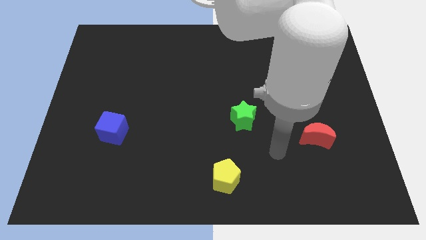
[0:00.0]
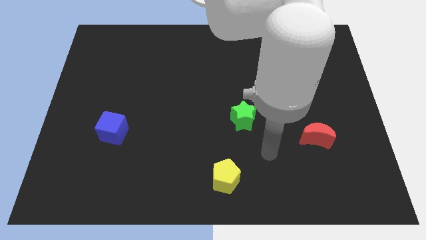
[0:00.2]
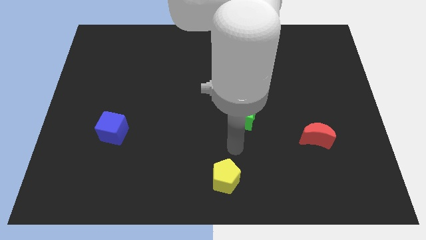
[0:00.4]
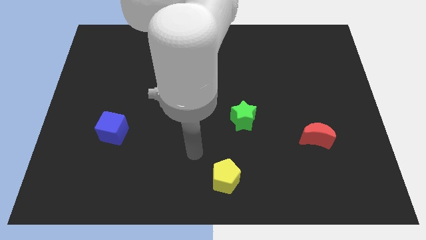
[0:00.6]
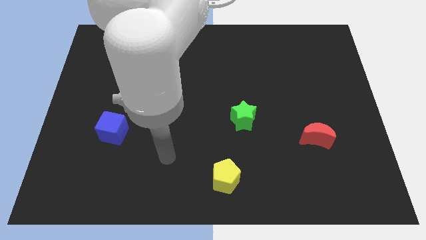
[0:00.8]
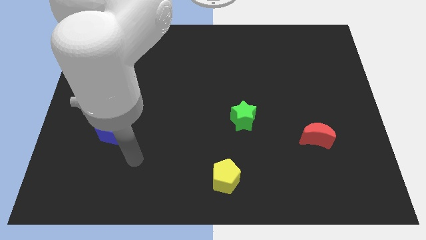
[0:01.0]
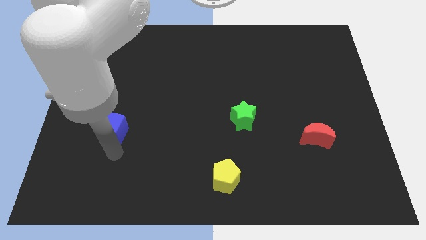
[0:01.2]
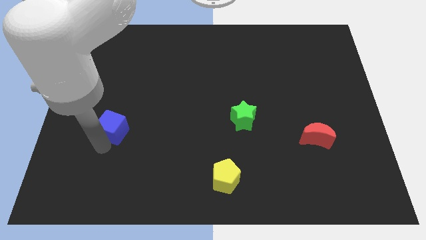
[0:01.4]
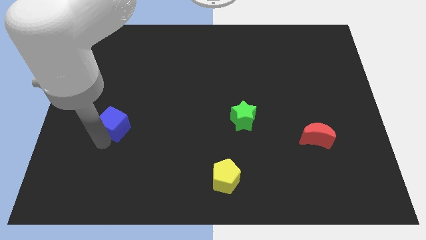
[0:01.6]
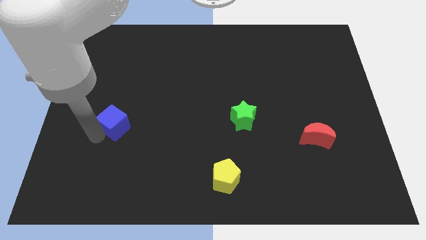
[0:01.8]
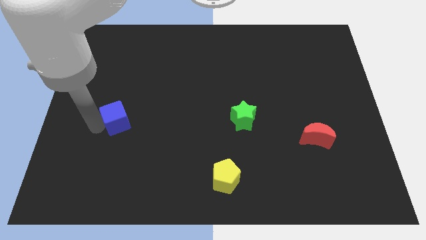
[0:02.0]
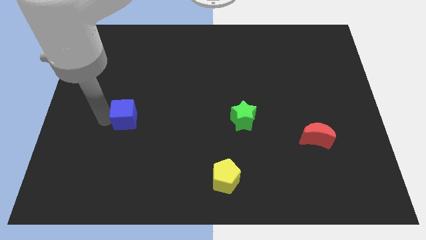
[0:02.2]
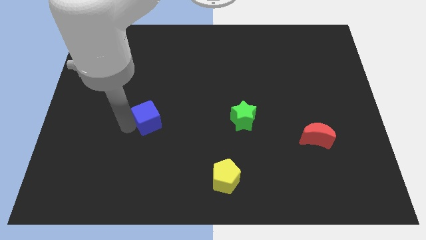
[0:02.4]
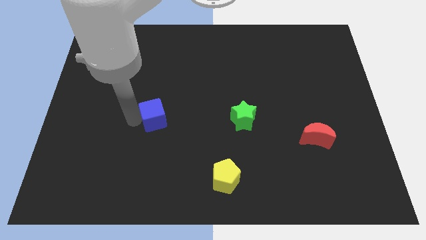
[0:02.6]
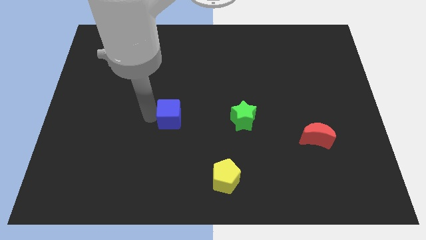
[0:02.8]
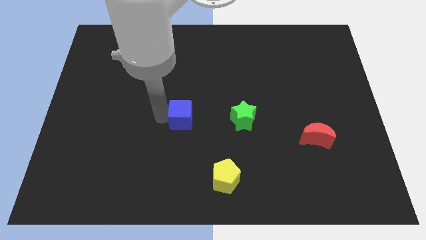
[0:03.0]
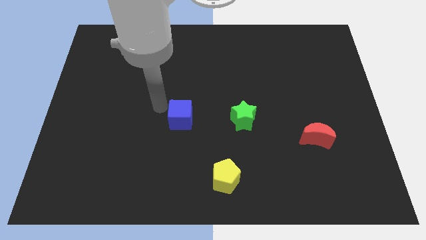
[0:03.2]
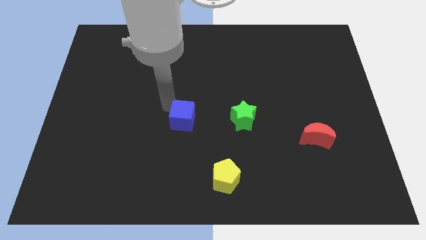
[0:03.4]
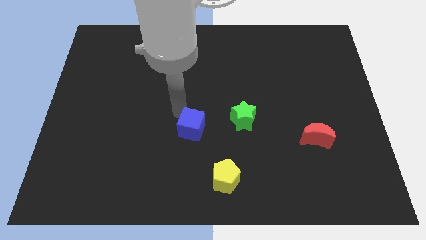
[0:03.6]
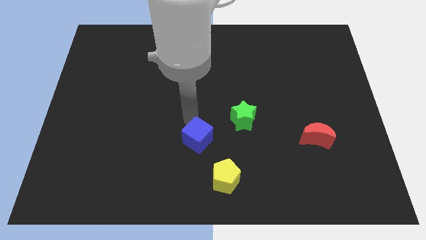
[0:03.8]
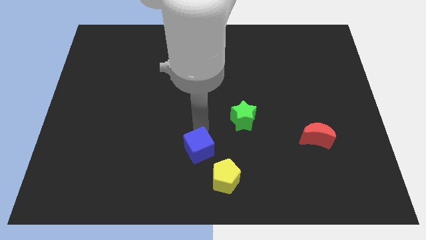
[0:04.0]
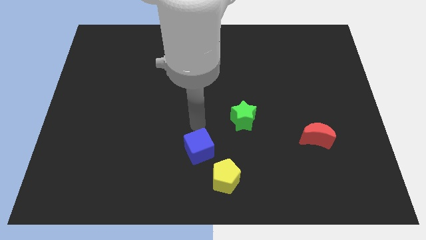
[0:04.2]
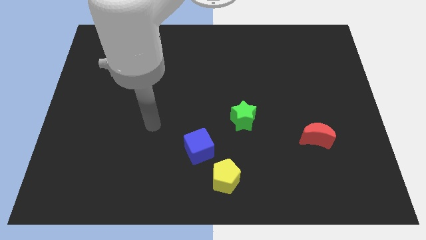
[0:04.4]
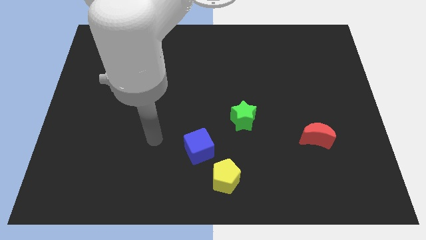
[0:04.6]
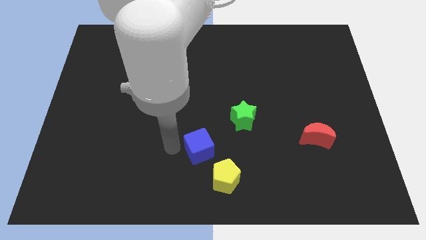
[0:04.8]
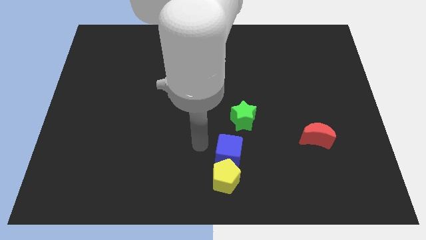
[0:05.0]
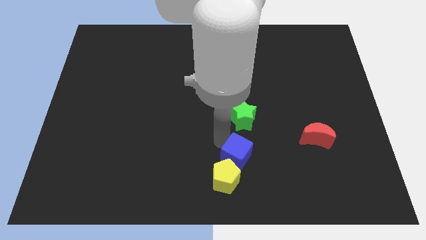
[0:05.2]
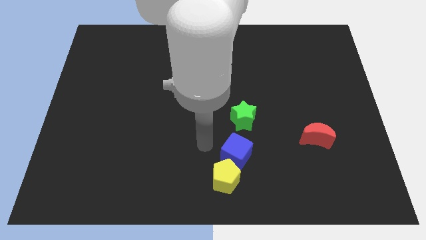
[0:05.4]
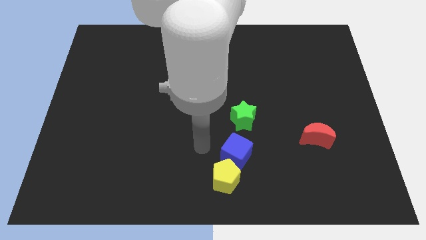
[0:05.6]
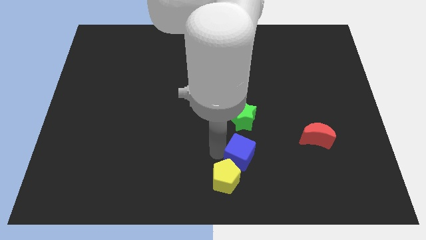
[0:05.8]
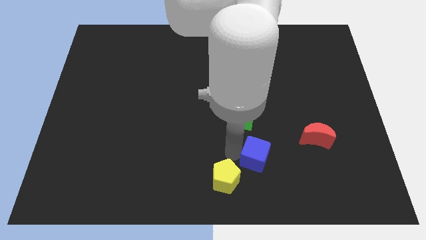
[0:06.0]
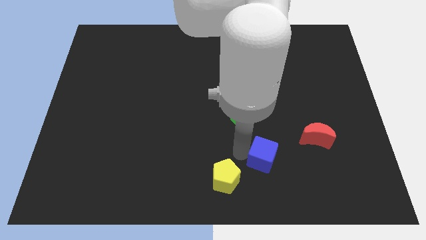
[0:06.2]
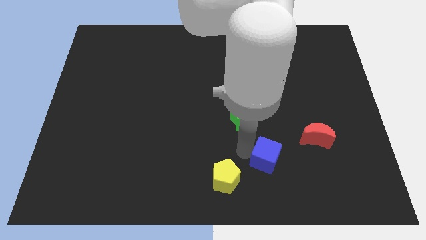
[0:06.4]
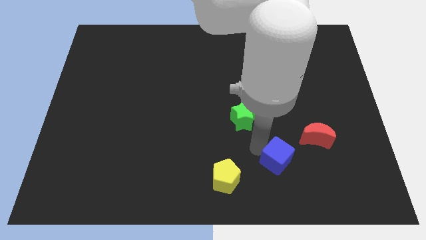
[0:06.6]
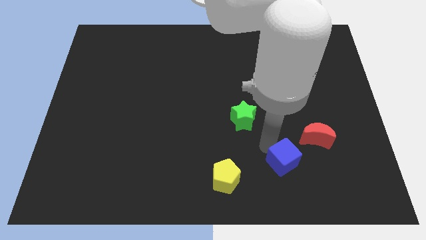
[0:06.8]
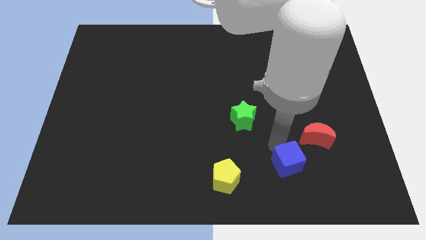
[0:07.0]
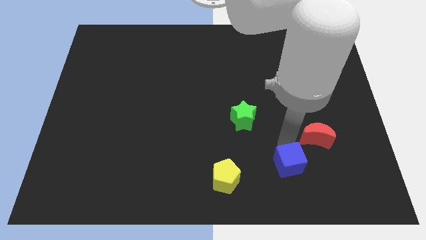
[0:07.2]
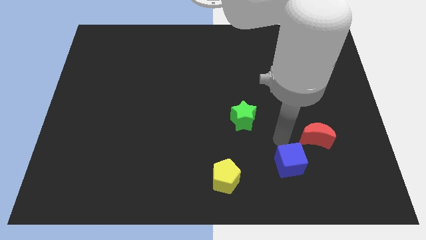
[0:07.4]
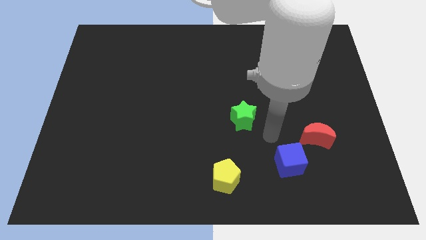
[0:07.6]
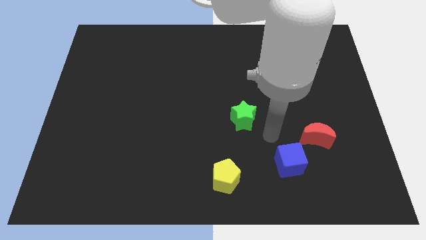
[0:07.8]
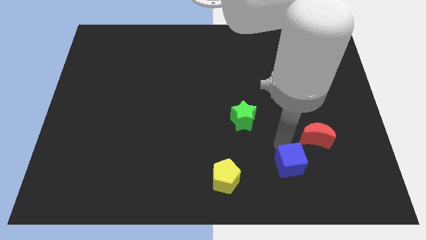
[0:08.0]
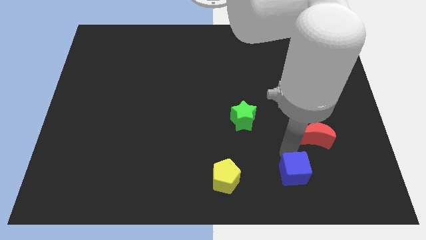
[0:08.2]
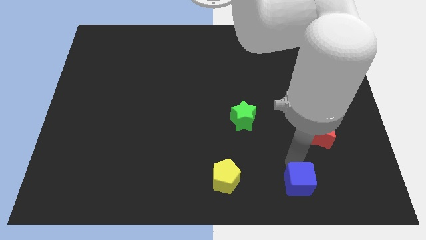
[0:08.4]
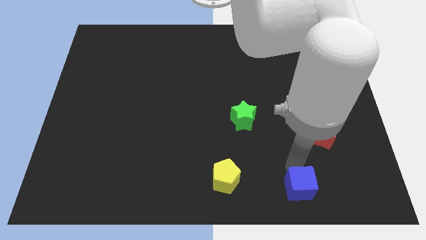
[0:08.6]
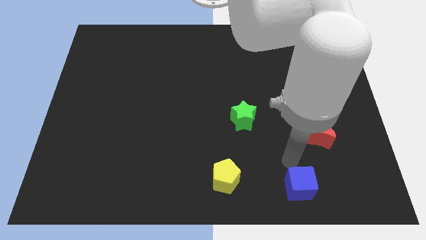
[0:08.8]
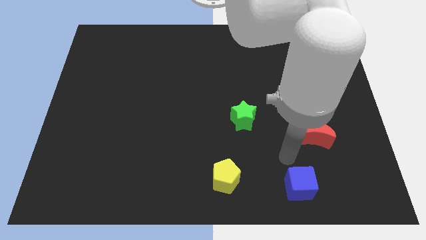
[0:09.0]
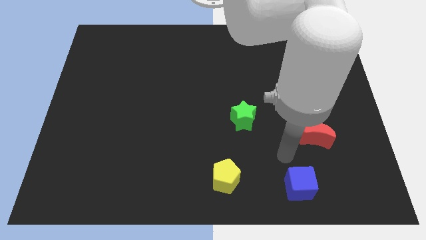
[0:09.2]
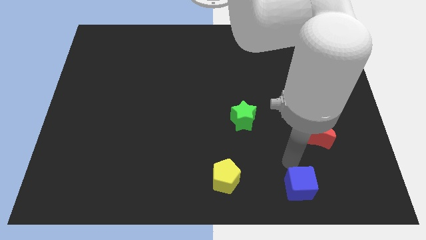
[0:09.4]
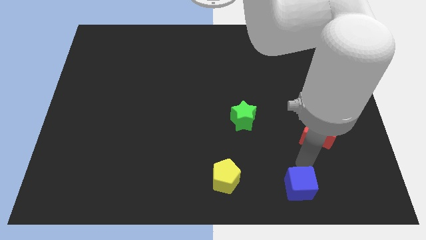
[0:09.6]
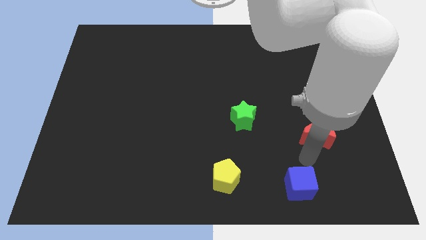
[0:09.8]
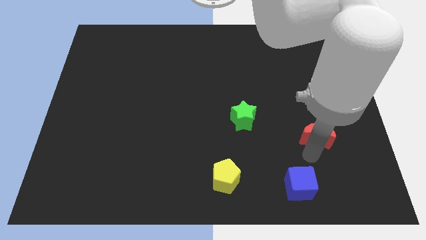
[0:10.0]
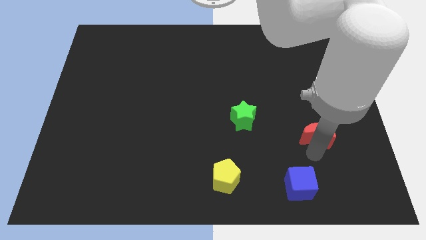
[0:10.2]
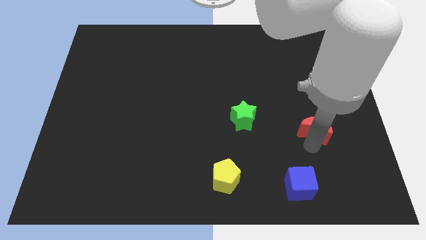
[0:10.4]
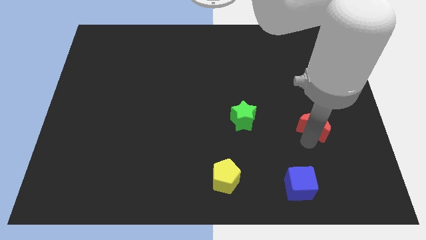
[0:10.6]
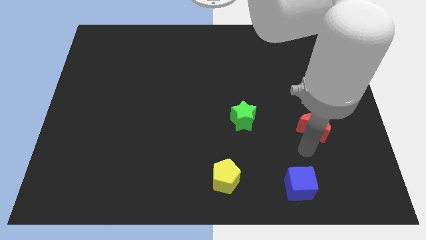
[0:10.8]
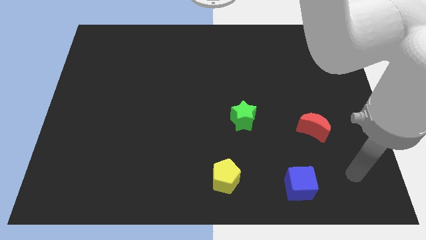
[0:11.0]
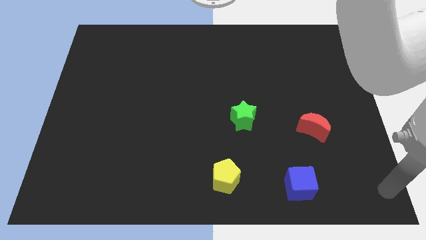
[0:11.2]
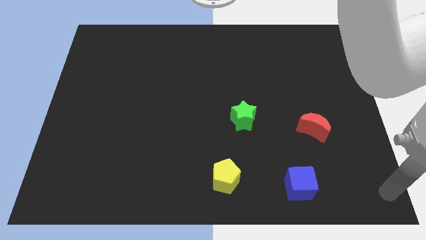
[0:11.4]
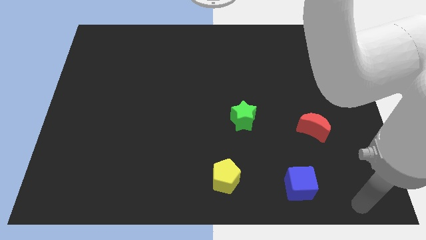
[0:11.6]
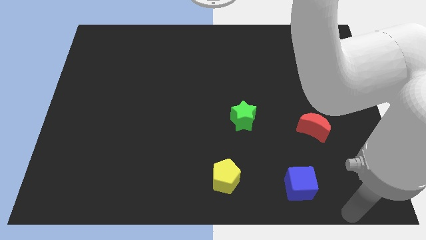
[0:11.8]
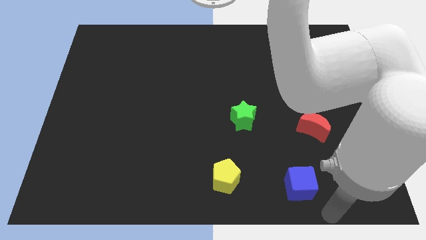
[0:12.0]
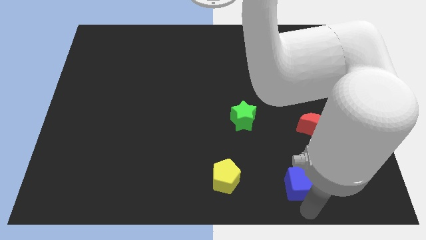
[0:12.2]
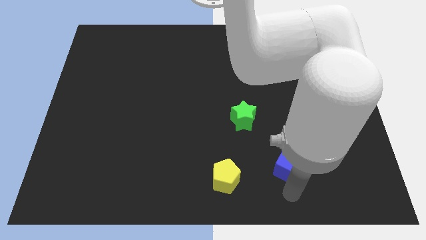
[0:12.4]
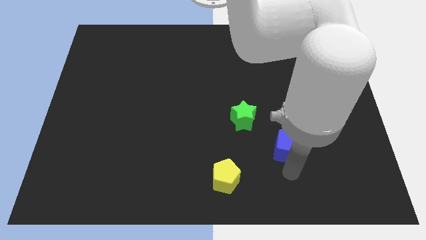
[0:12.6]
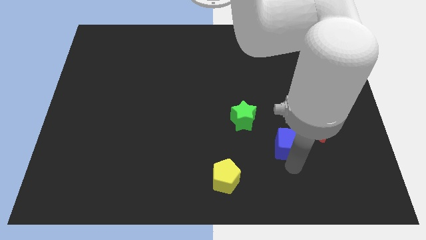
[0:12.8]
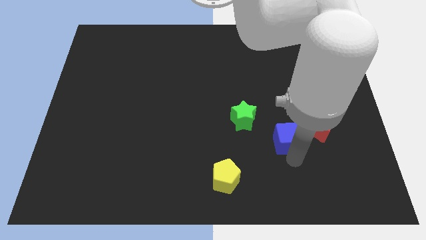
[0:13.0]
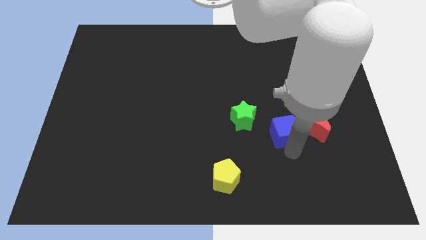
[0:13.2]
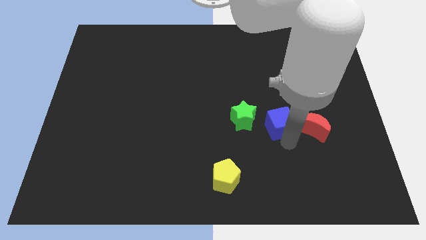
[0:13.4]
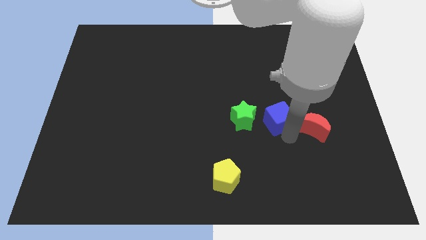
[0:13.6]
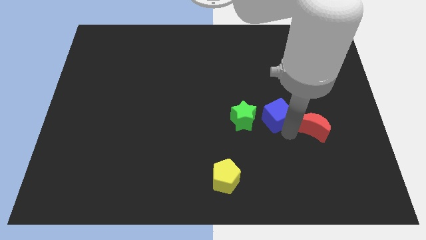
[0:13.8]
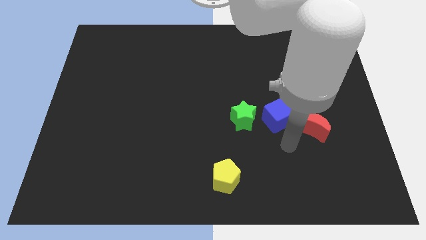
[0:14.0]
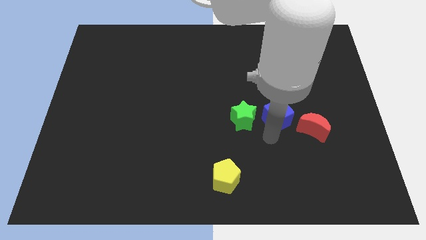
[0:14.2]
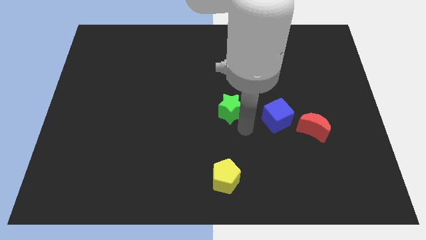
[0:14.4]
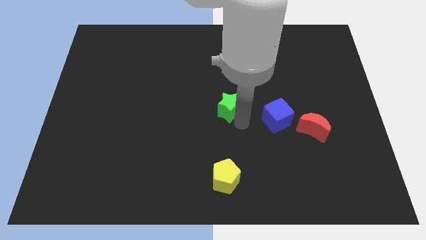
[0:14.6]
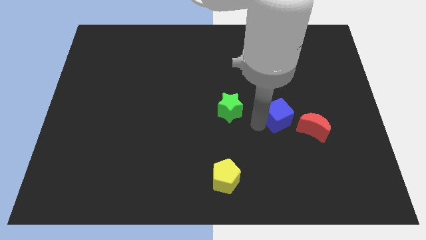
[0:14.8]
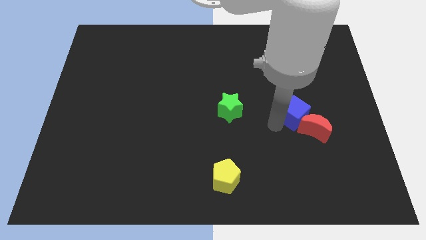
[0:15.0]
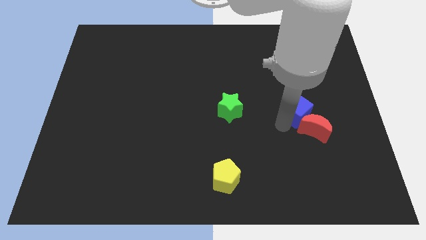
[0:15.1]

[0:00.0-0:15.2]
slide the cube close to the red block

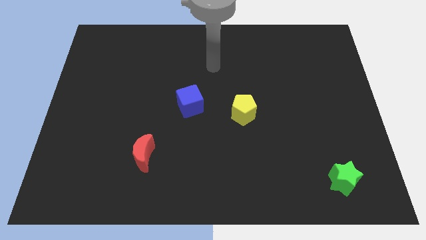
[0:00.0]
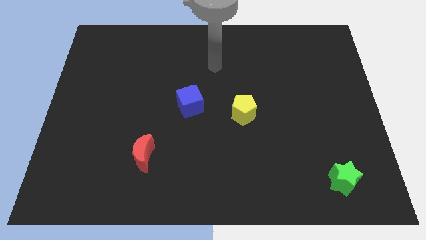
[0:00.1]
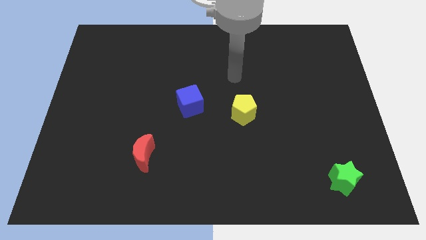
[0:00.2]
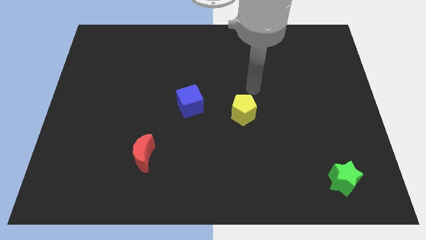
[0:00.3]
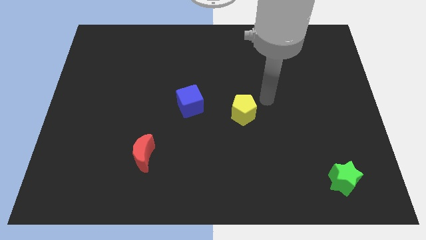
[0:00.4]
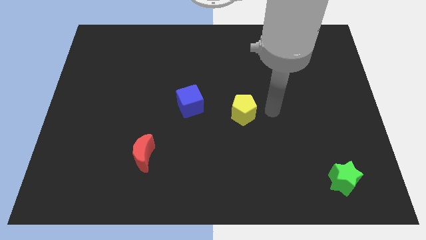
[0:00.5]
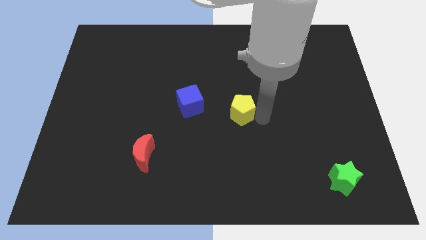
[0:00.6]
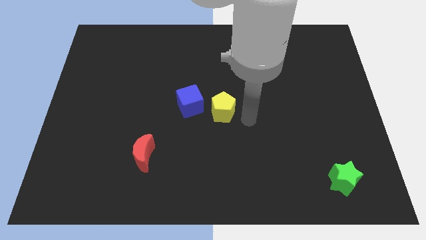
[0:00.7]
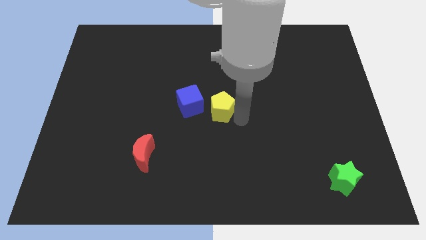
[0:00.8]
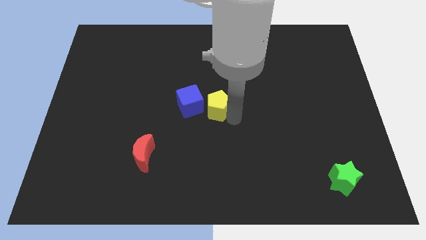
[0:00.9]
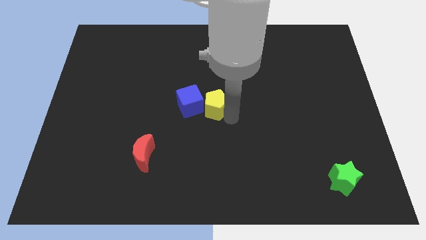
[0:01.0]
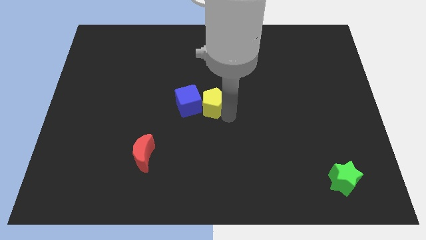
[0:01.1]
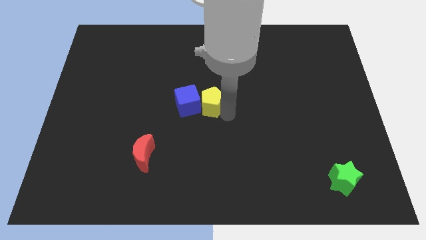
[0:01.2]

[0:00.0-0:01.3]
put the yellow block to the blue cube
